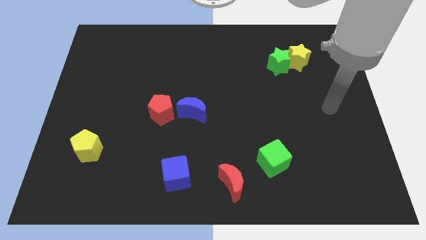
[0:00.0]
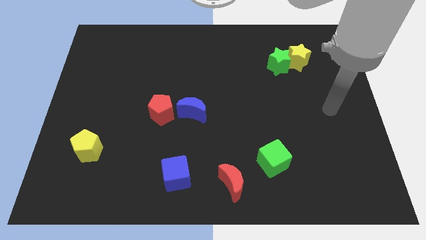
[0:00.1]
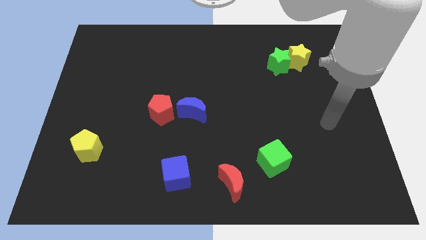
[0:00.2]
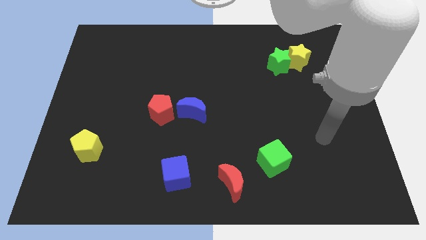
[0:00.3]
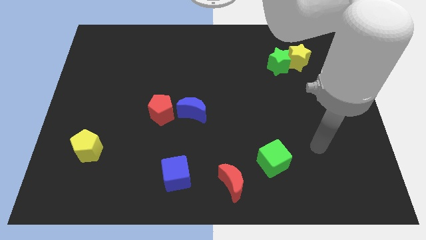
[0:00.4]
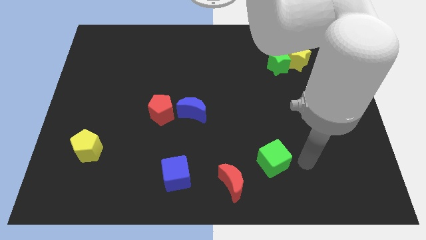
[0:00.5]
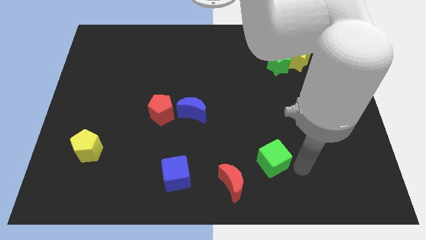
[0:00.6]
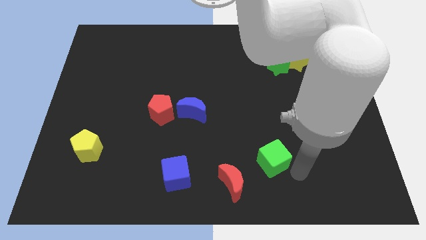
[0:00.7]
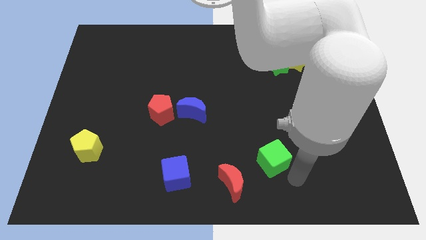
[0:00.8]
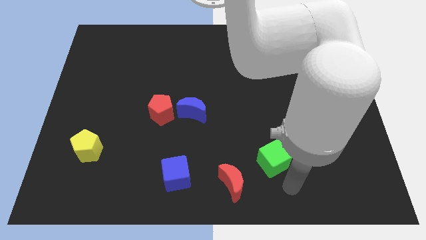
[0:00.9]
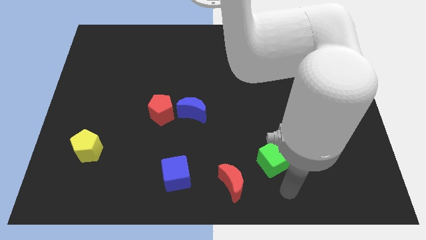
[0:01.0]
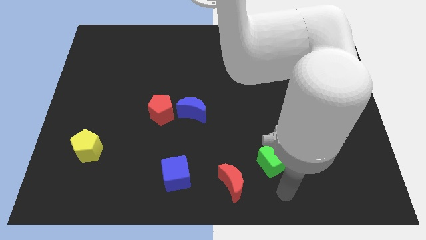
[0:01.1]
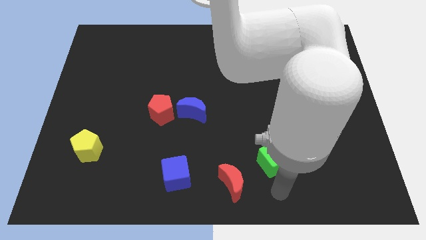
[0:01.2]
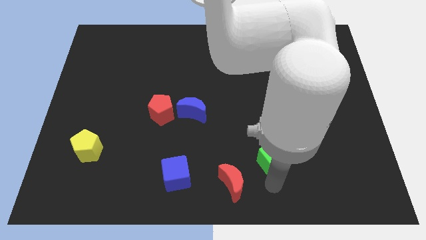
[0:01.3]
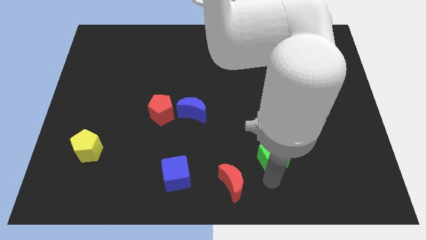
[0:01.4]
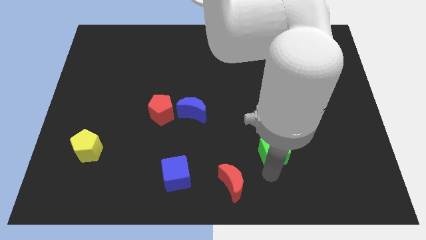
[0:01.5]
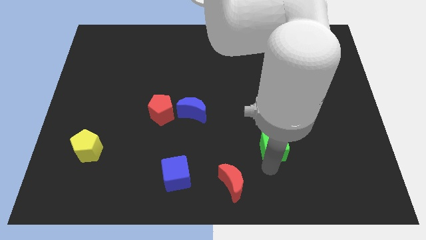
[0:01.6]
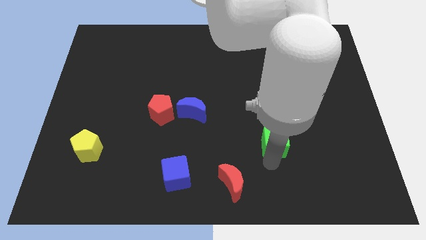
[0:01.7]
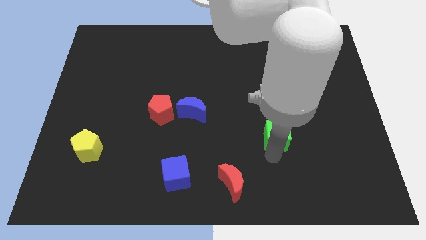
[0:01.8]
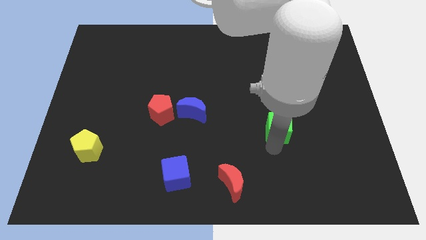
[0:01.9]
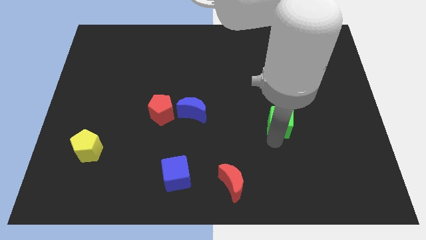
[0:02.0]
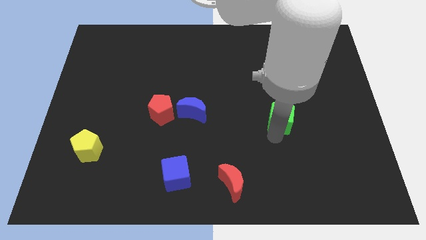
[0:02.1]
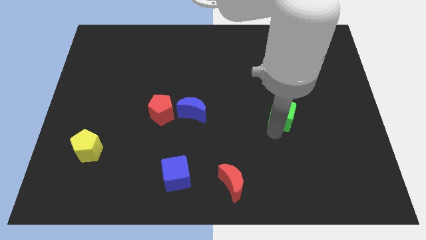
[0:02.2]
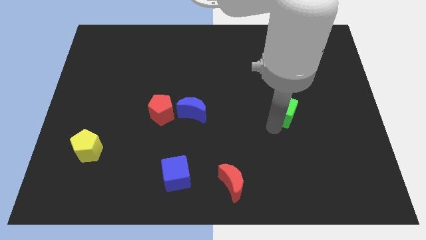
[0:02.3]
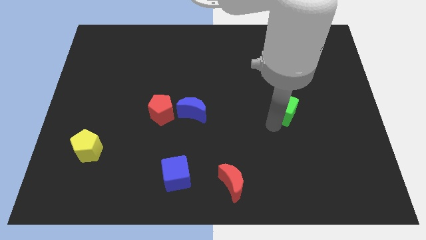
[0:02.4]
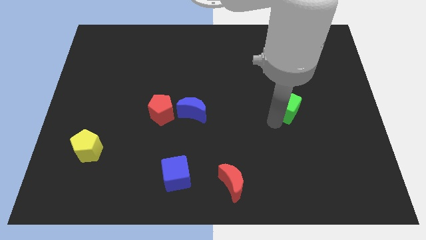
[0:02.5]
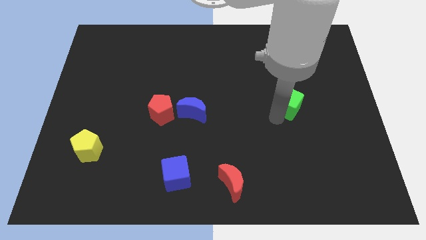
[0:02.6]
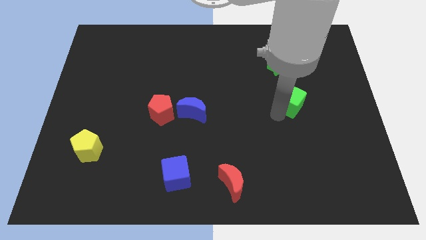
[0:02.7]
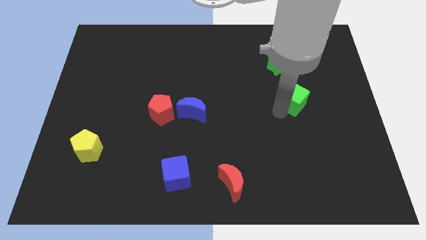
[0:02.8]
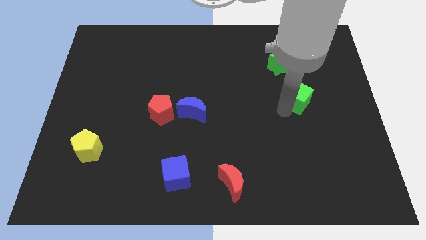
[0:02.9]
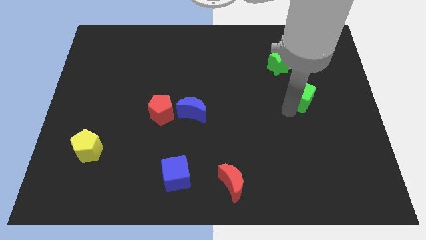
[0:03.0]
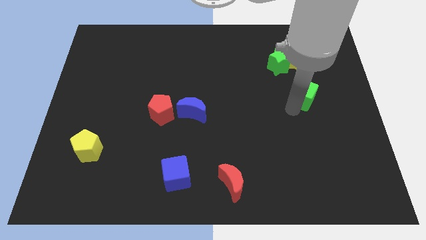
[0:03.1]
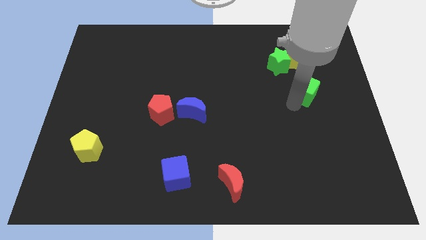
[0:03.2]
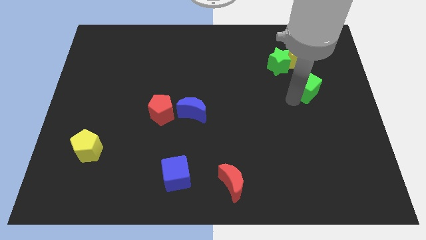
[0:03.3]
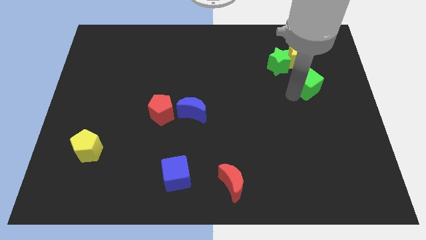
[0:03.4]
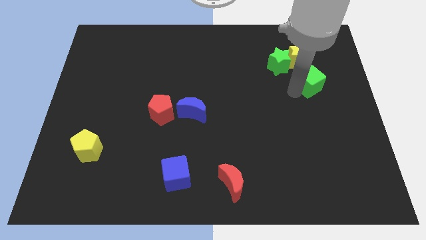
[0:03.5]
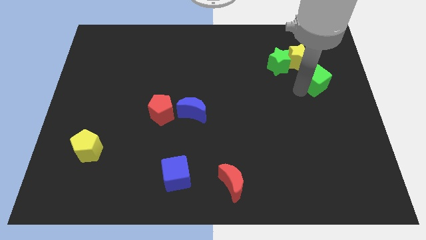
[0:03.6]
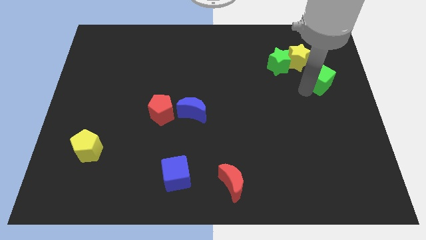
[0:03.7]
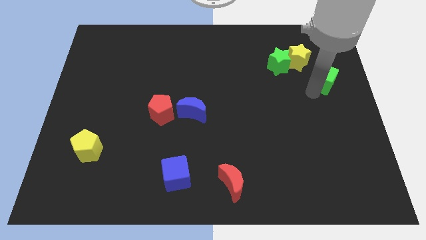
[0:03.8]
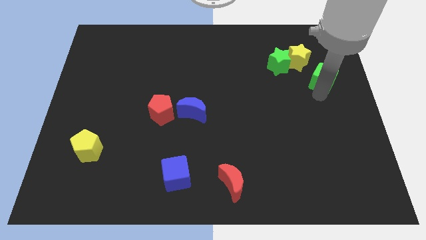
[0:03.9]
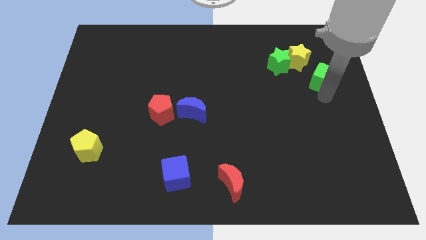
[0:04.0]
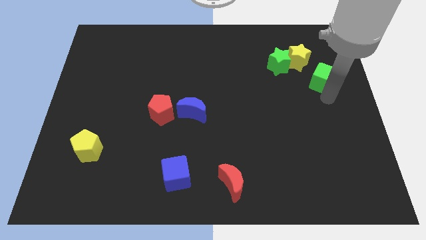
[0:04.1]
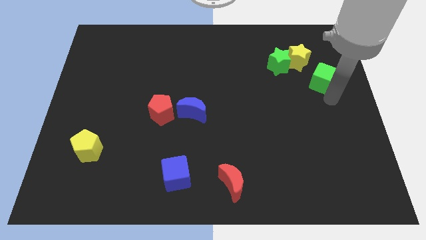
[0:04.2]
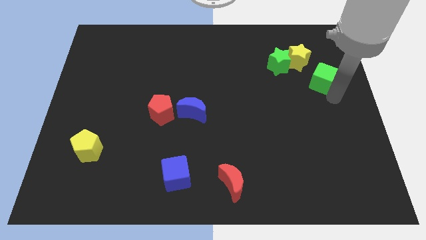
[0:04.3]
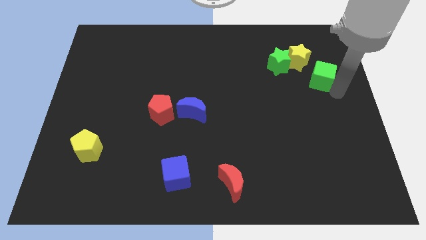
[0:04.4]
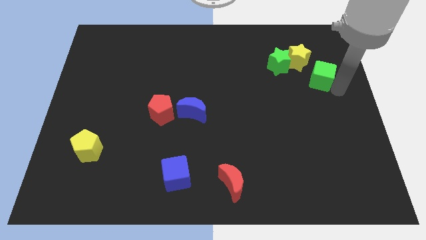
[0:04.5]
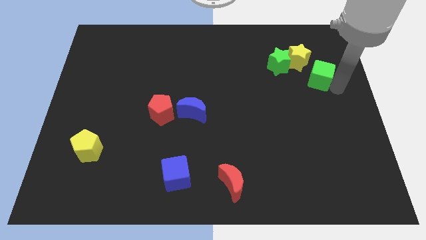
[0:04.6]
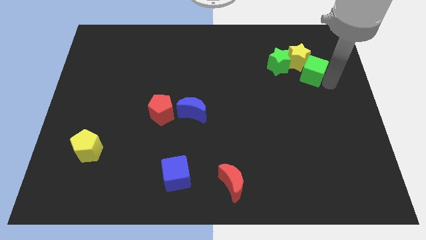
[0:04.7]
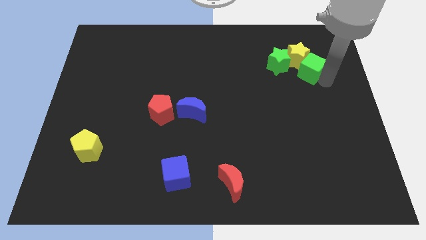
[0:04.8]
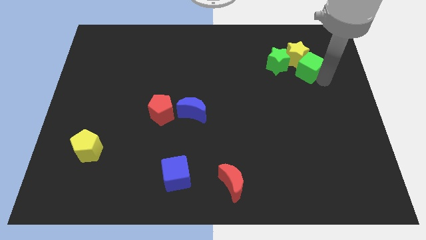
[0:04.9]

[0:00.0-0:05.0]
slide the green cube to the yellow star

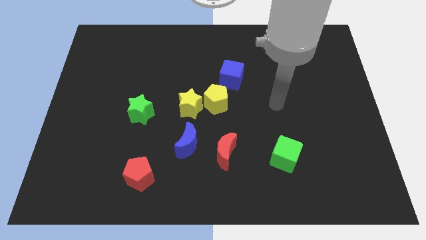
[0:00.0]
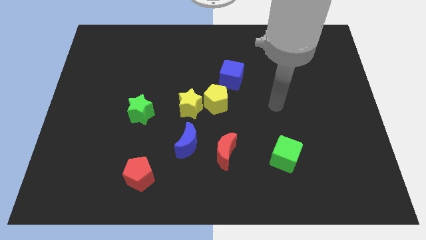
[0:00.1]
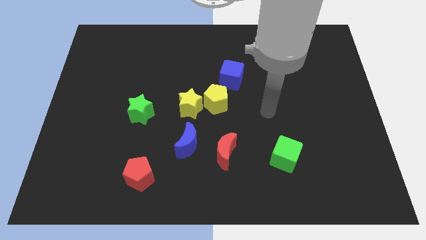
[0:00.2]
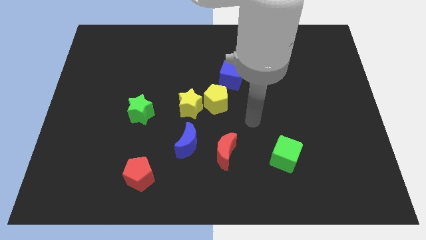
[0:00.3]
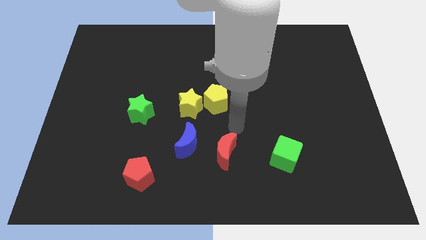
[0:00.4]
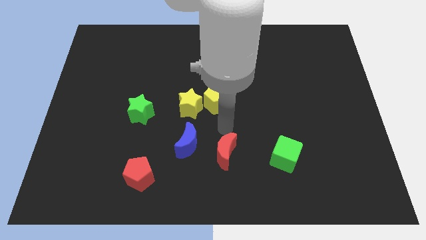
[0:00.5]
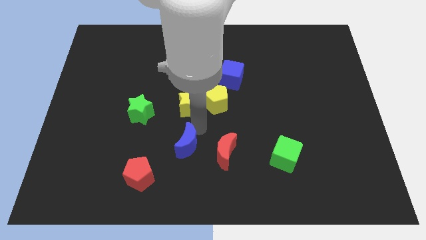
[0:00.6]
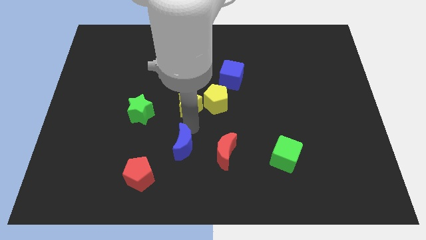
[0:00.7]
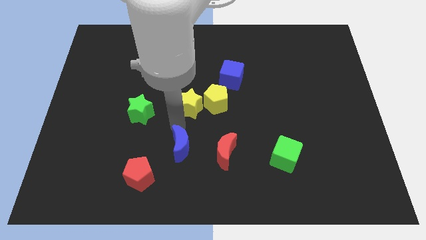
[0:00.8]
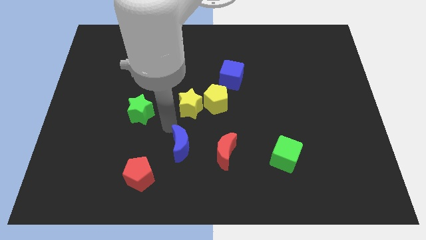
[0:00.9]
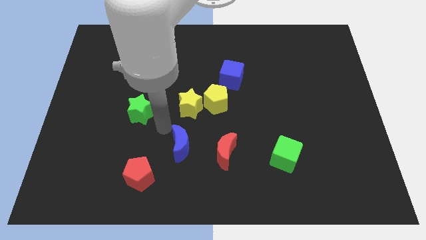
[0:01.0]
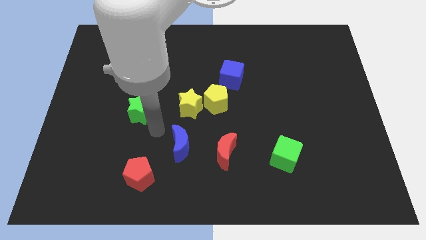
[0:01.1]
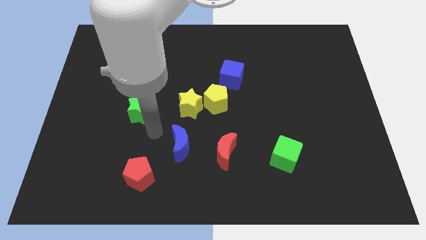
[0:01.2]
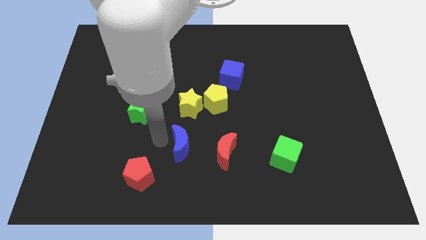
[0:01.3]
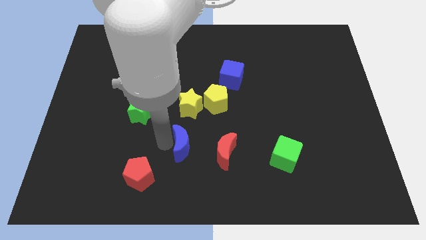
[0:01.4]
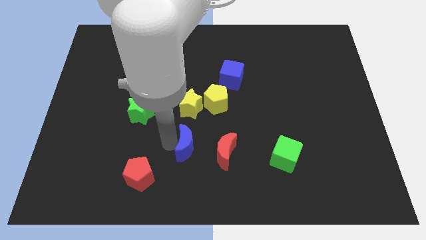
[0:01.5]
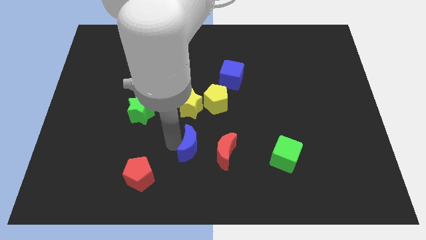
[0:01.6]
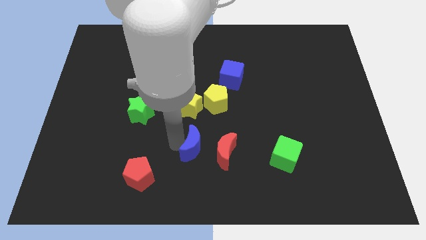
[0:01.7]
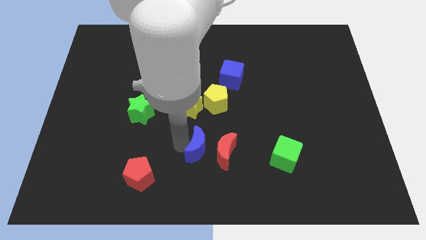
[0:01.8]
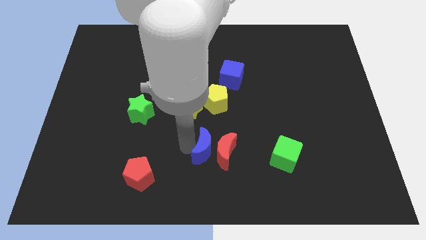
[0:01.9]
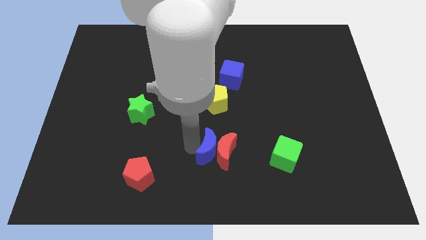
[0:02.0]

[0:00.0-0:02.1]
put the blue moon towards the red moon

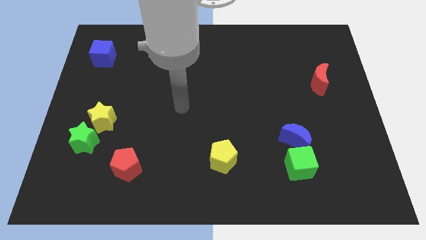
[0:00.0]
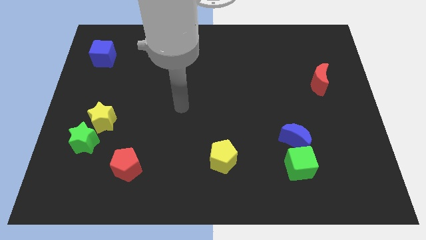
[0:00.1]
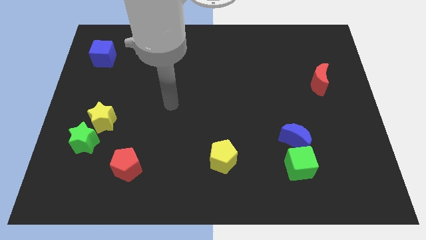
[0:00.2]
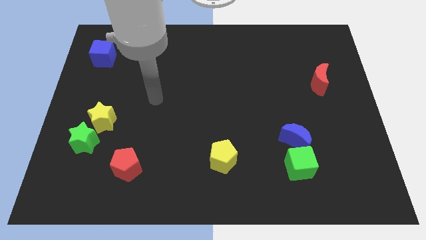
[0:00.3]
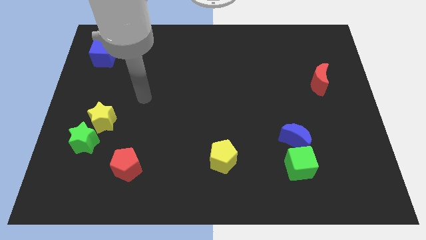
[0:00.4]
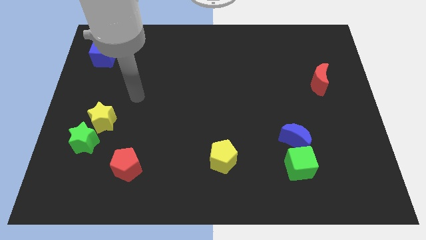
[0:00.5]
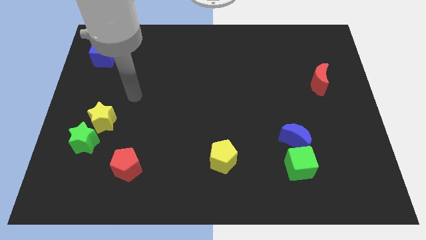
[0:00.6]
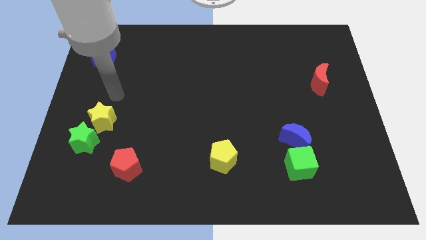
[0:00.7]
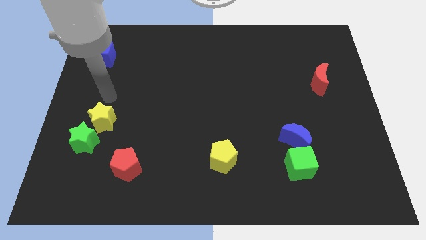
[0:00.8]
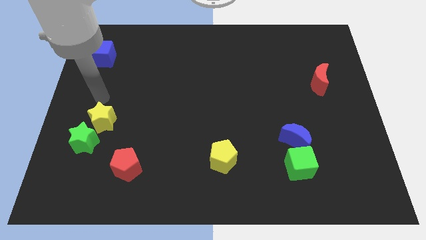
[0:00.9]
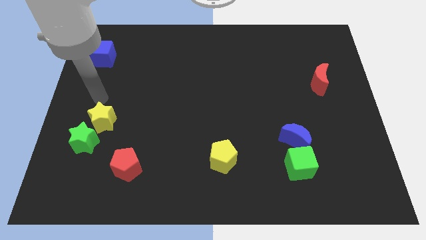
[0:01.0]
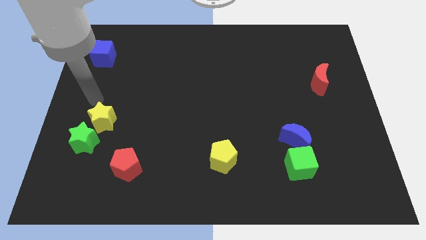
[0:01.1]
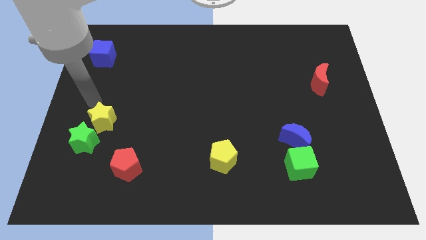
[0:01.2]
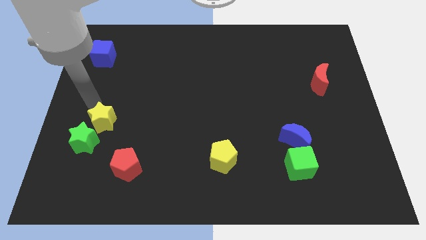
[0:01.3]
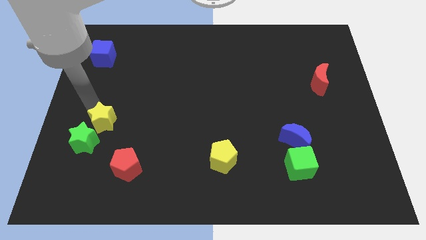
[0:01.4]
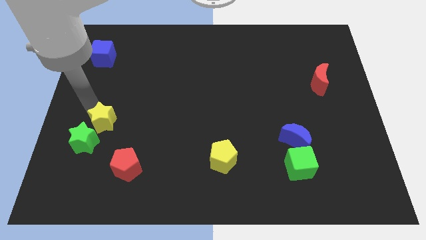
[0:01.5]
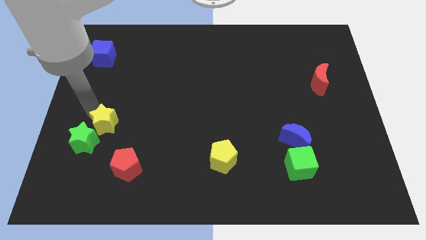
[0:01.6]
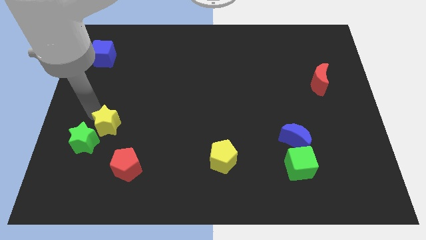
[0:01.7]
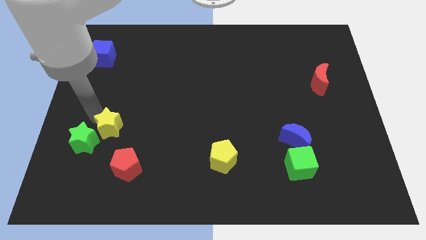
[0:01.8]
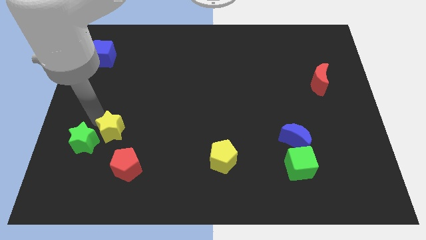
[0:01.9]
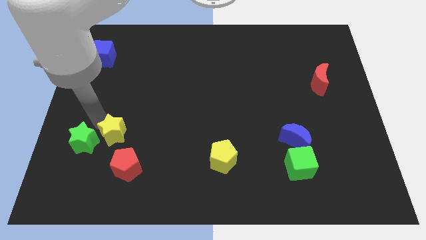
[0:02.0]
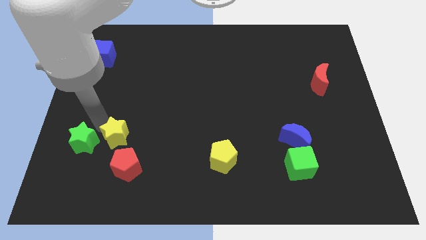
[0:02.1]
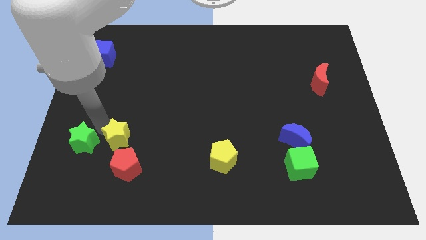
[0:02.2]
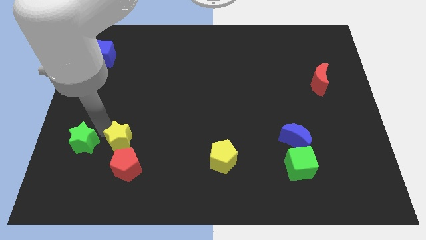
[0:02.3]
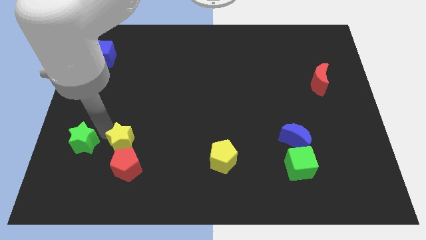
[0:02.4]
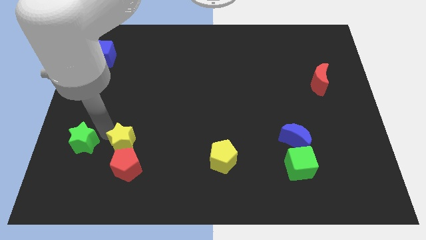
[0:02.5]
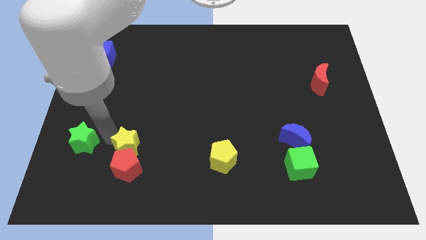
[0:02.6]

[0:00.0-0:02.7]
put the yellow star close to the red pentagon
